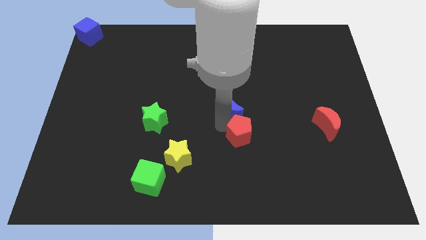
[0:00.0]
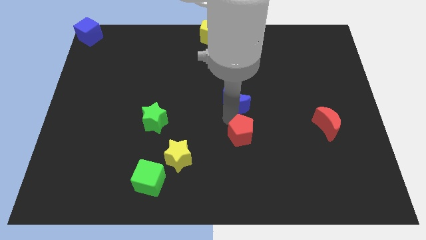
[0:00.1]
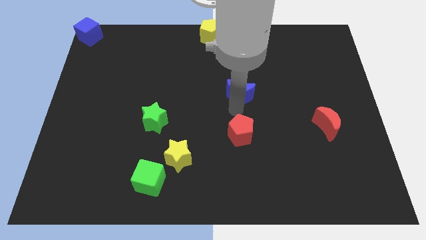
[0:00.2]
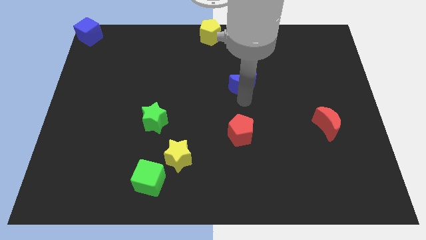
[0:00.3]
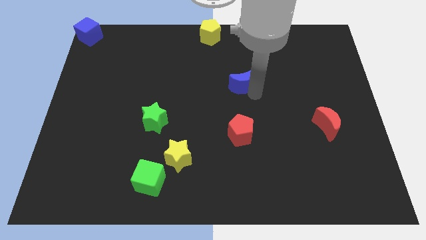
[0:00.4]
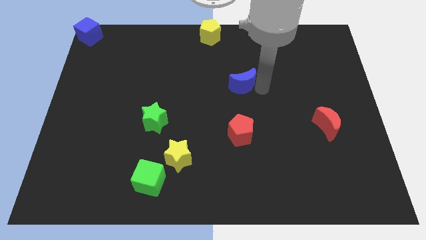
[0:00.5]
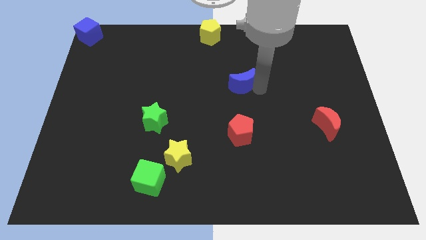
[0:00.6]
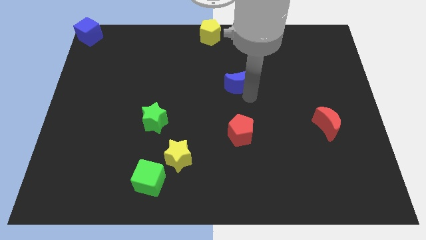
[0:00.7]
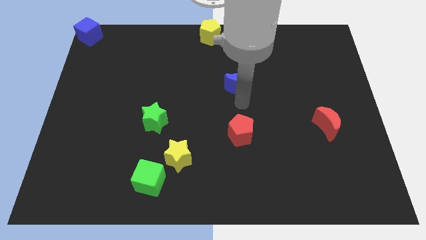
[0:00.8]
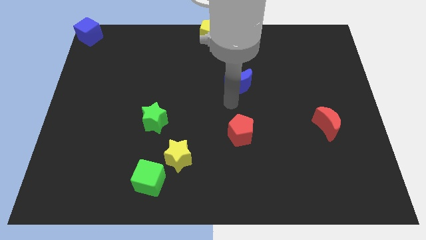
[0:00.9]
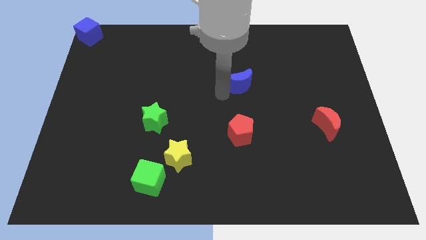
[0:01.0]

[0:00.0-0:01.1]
drag blue moon slightly upwards

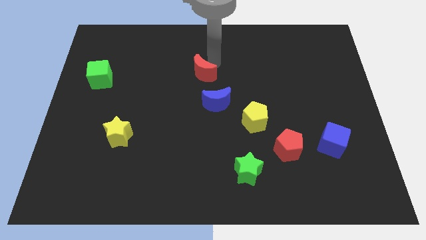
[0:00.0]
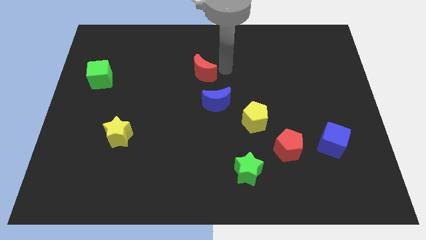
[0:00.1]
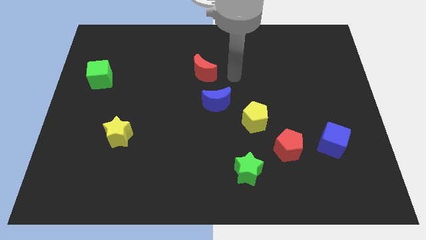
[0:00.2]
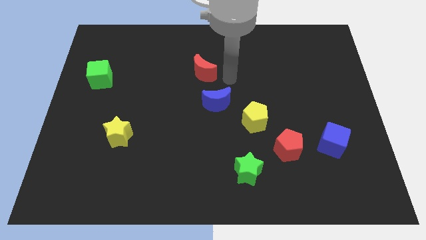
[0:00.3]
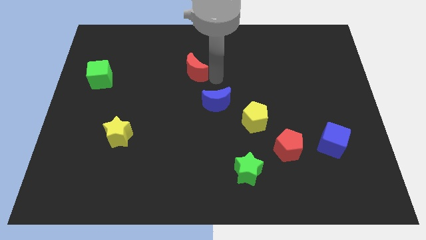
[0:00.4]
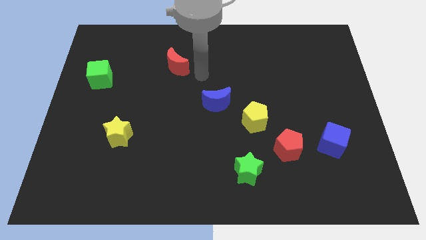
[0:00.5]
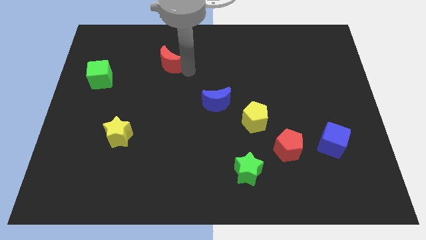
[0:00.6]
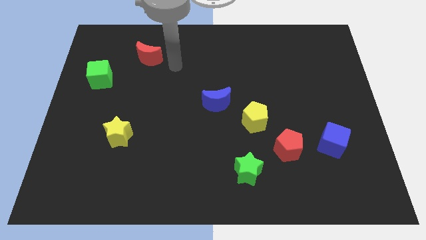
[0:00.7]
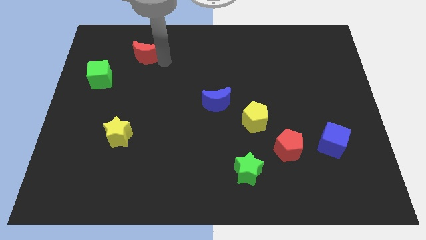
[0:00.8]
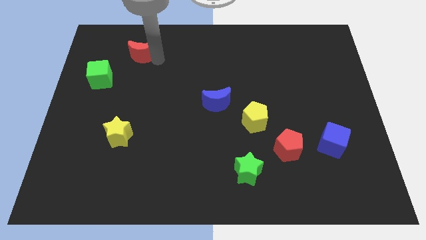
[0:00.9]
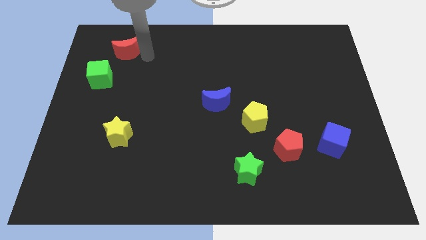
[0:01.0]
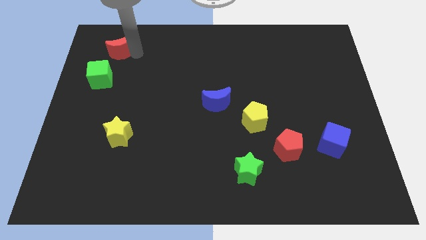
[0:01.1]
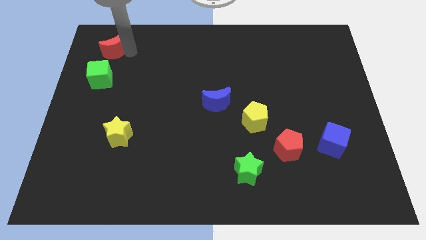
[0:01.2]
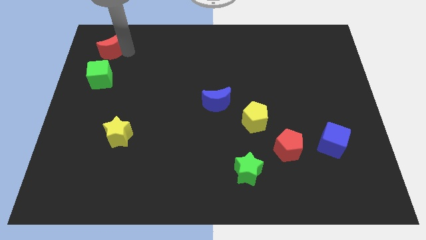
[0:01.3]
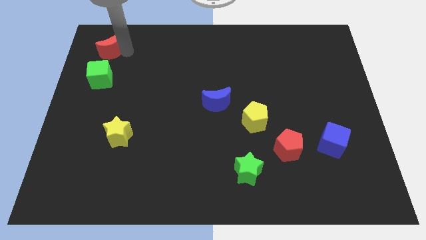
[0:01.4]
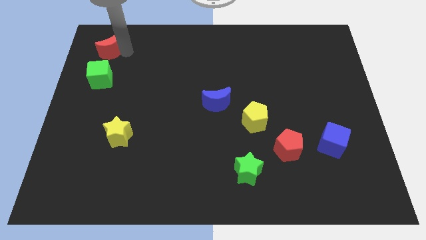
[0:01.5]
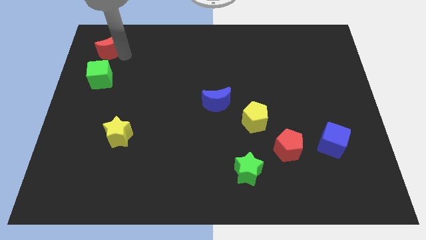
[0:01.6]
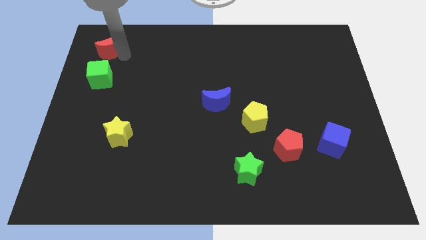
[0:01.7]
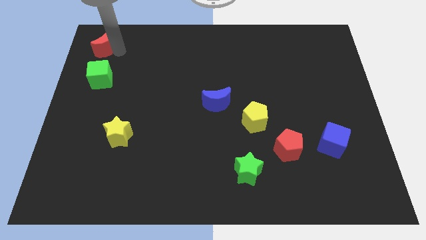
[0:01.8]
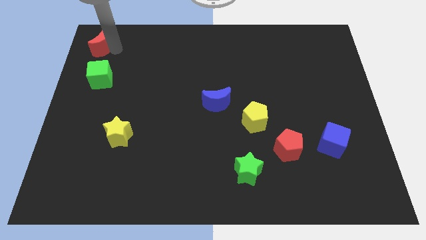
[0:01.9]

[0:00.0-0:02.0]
move the red moon on the top of the green cube vertically

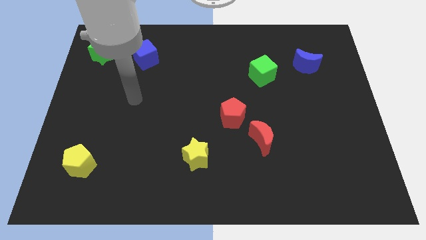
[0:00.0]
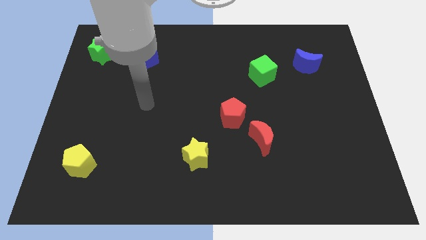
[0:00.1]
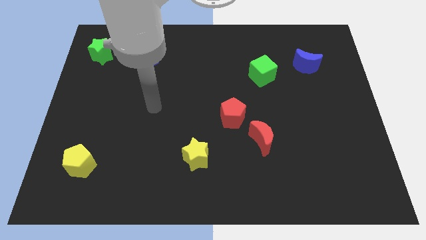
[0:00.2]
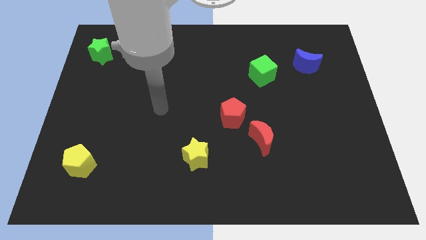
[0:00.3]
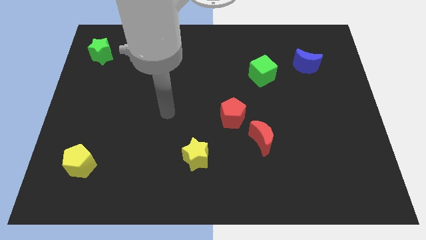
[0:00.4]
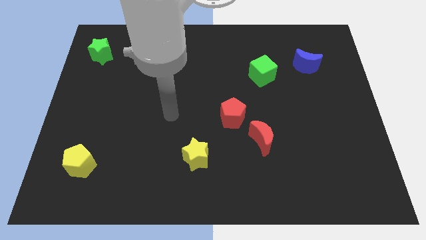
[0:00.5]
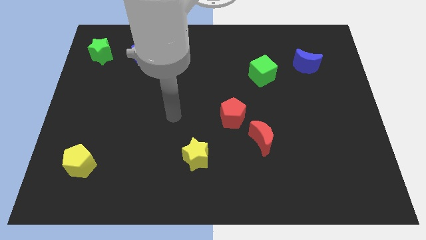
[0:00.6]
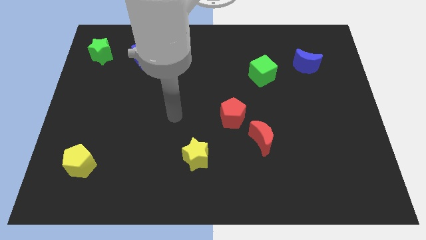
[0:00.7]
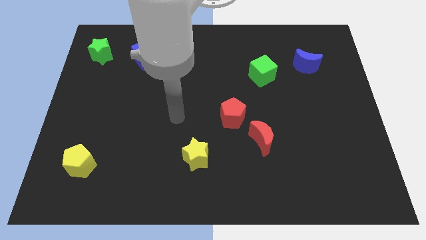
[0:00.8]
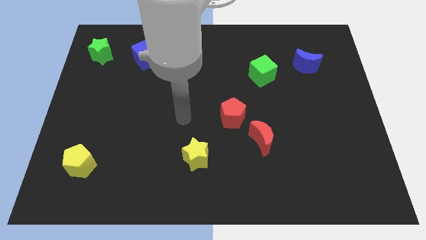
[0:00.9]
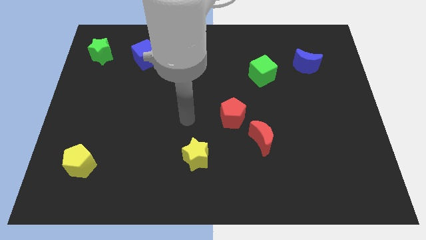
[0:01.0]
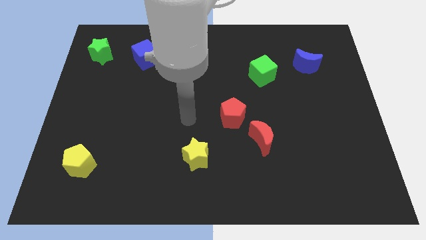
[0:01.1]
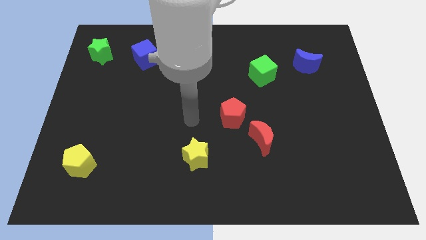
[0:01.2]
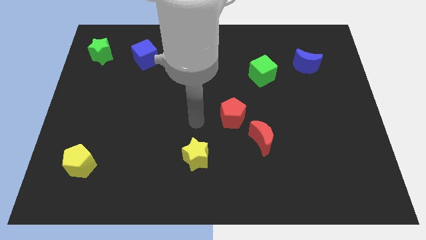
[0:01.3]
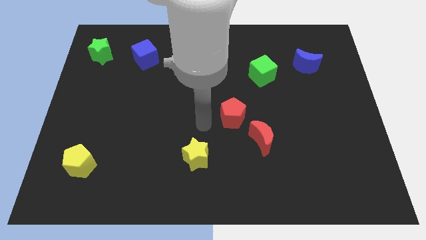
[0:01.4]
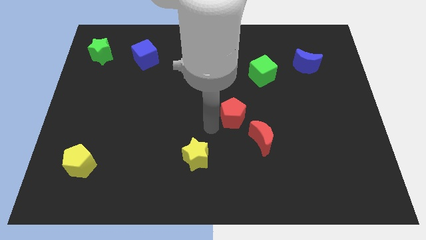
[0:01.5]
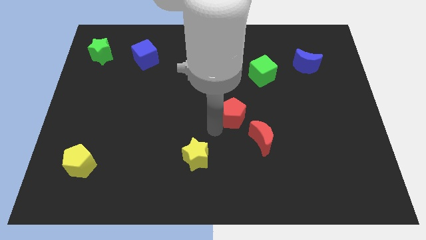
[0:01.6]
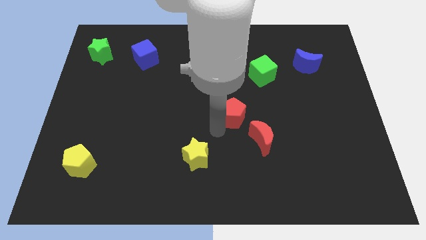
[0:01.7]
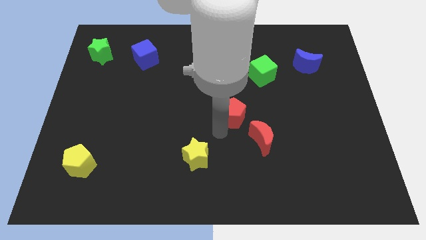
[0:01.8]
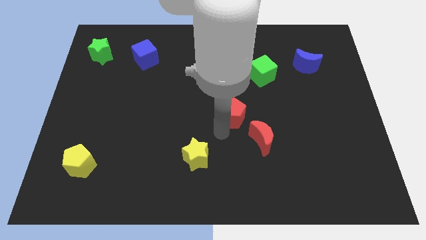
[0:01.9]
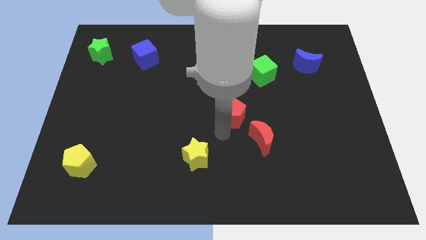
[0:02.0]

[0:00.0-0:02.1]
place arm at the bottom of red pentagon

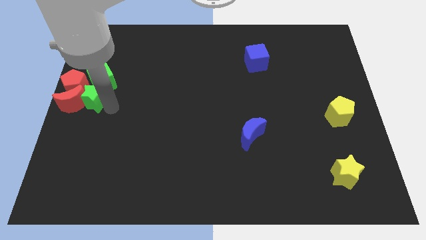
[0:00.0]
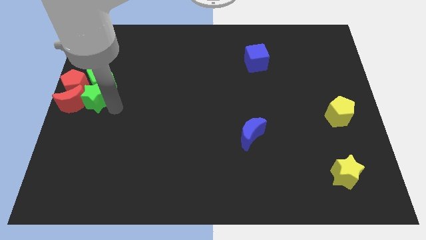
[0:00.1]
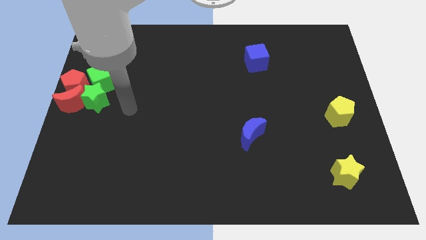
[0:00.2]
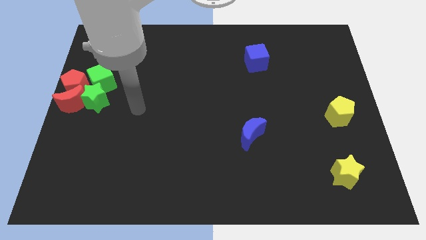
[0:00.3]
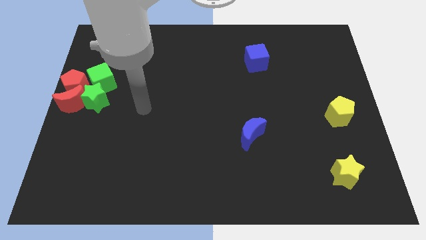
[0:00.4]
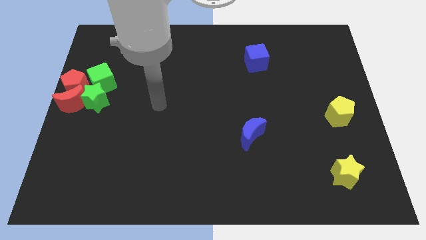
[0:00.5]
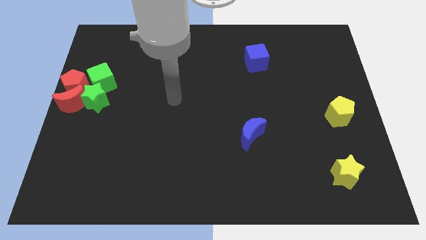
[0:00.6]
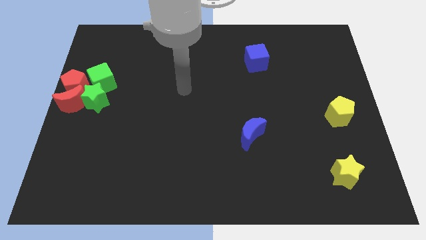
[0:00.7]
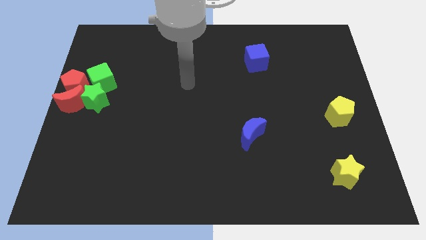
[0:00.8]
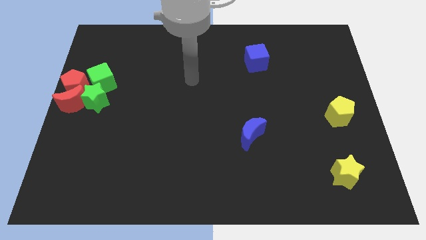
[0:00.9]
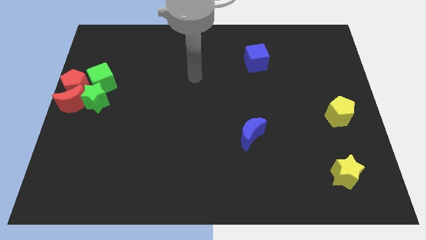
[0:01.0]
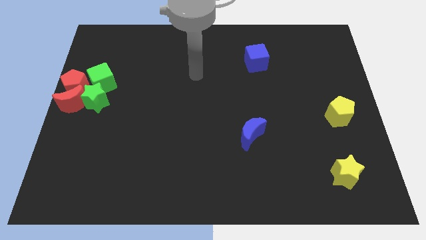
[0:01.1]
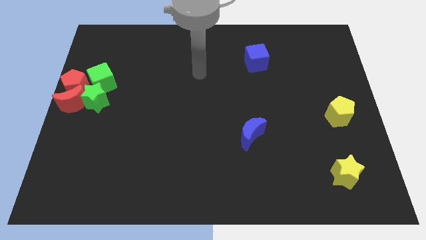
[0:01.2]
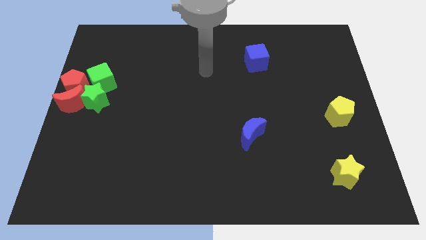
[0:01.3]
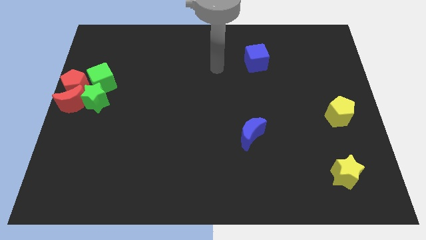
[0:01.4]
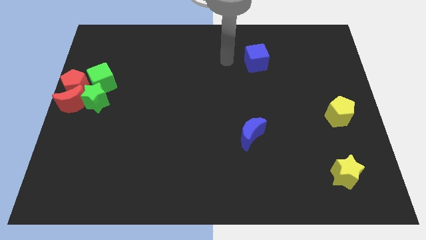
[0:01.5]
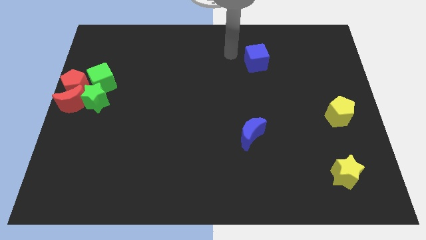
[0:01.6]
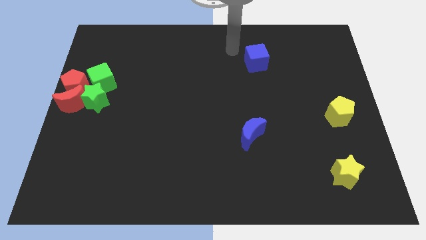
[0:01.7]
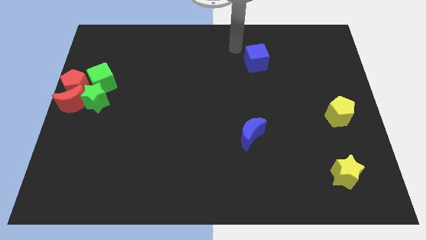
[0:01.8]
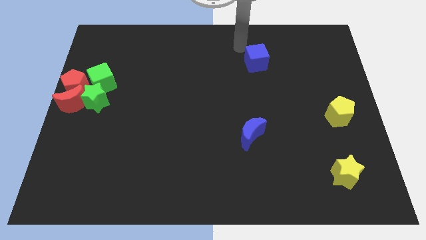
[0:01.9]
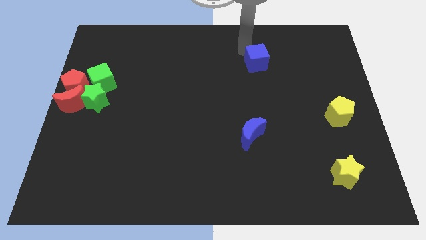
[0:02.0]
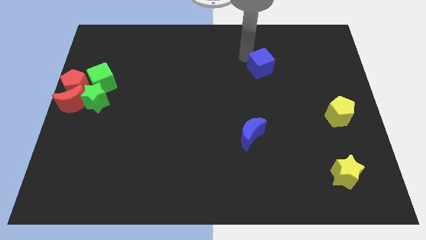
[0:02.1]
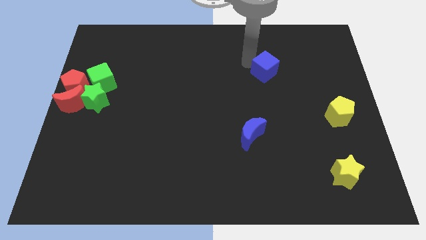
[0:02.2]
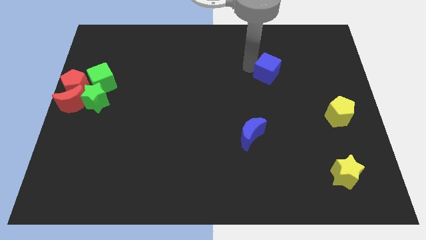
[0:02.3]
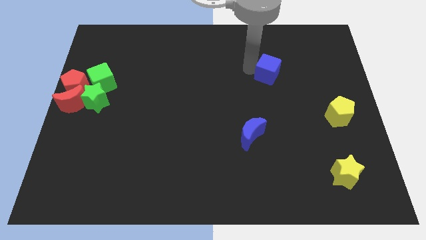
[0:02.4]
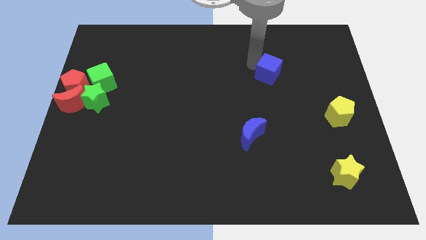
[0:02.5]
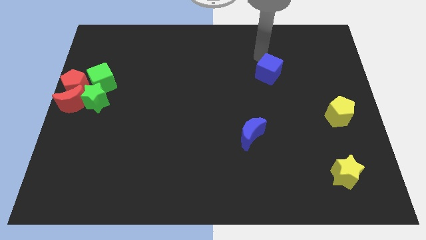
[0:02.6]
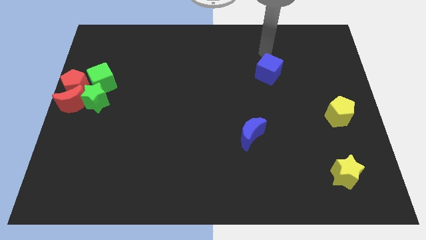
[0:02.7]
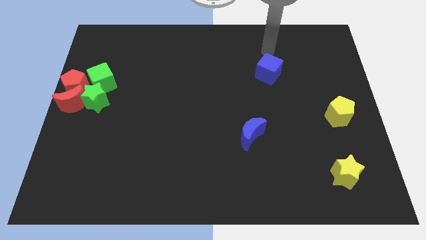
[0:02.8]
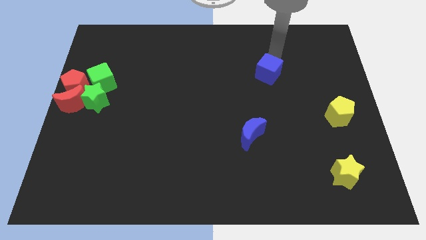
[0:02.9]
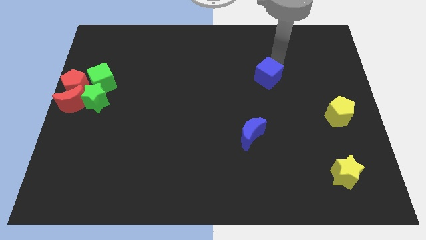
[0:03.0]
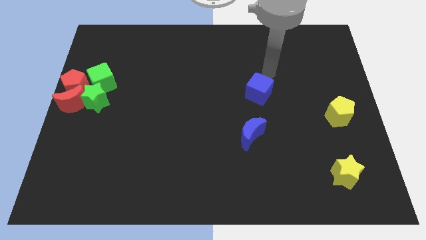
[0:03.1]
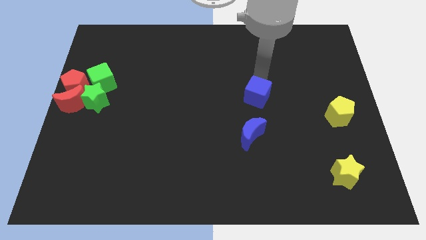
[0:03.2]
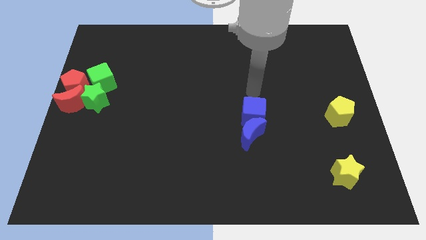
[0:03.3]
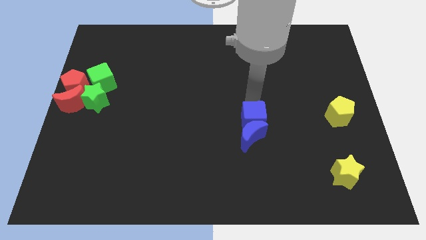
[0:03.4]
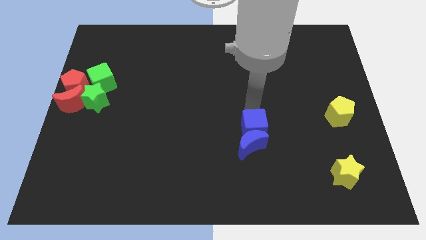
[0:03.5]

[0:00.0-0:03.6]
slide the blue cube into the top side of the blue moon

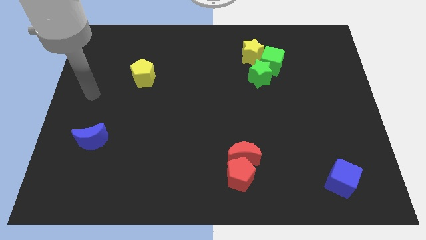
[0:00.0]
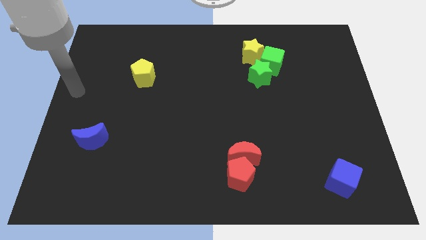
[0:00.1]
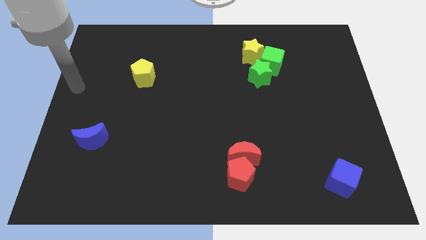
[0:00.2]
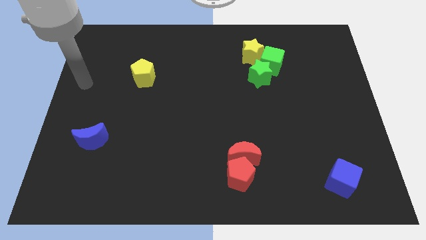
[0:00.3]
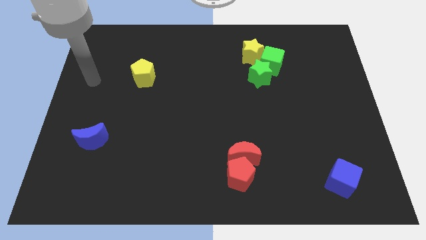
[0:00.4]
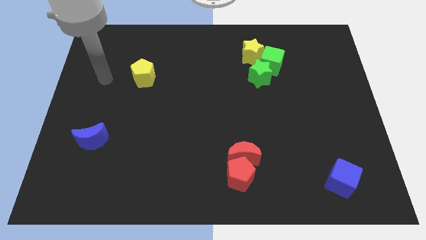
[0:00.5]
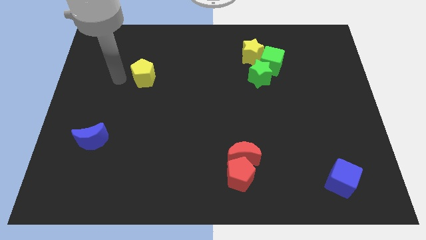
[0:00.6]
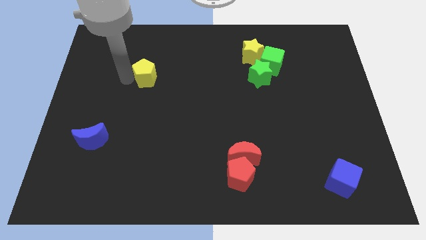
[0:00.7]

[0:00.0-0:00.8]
touch the yellow pentagon
